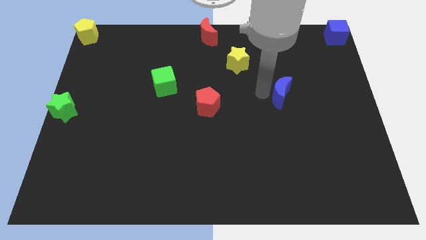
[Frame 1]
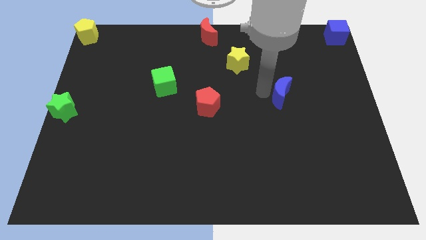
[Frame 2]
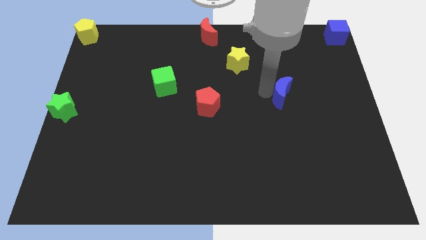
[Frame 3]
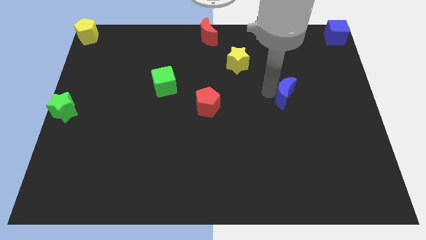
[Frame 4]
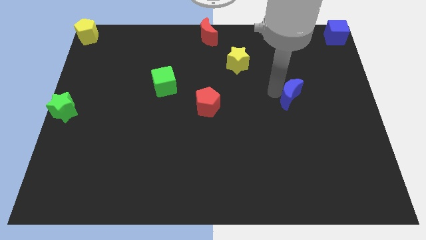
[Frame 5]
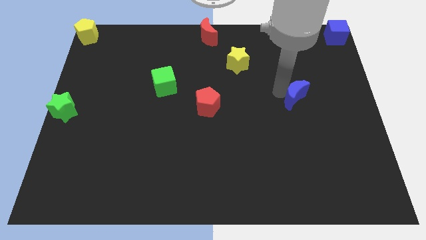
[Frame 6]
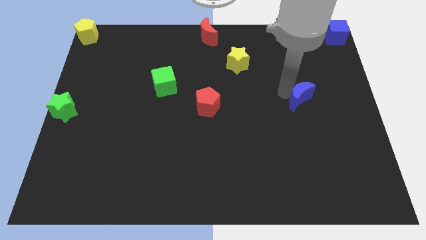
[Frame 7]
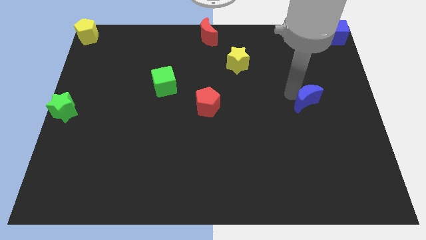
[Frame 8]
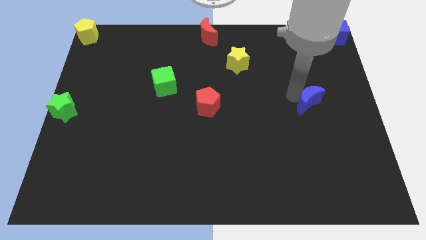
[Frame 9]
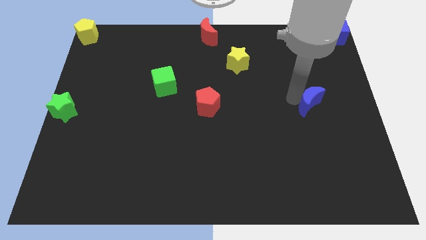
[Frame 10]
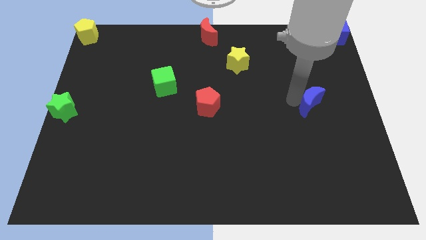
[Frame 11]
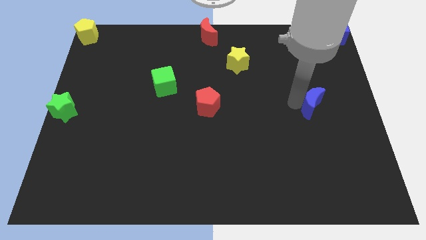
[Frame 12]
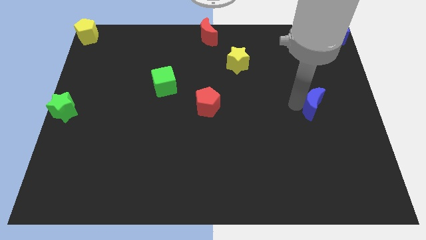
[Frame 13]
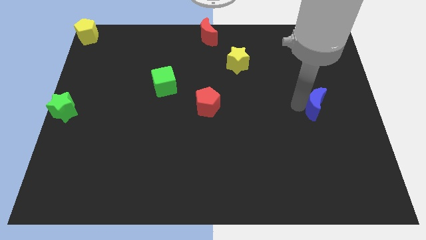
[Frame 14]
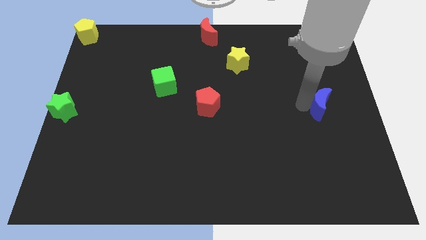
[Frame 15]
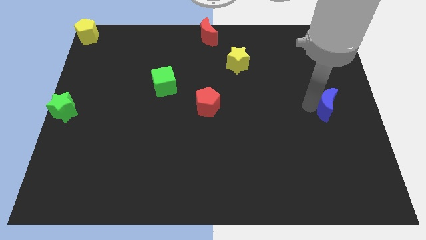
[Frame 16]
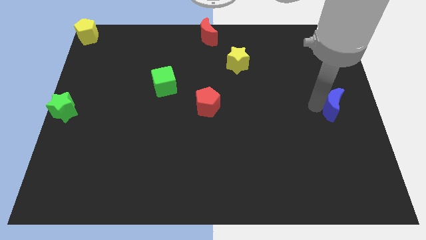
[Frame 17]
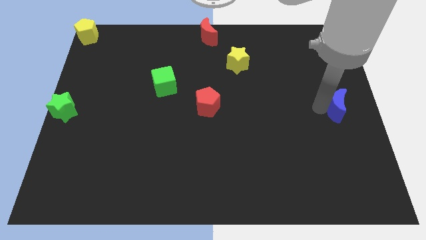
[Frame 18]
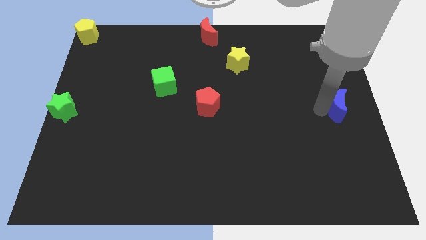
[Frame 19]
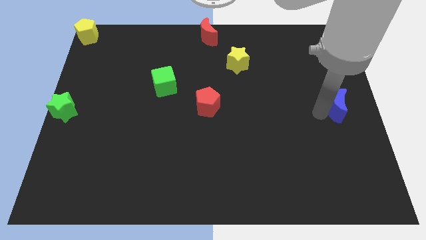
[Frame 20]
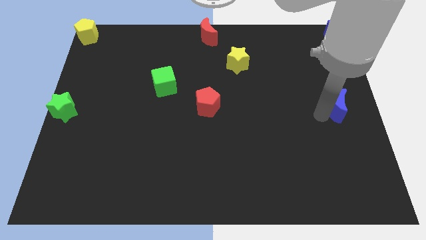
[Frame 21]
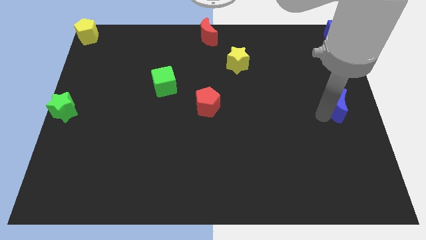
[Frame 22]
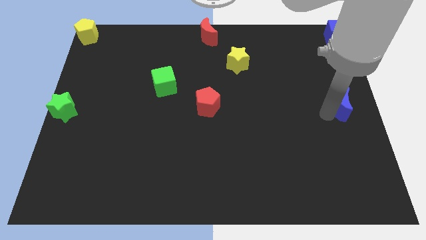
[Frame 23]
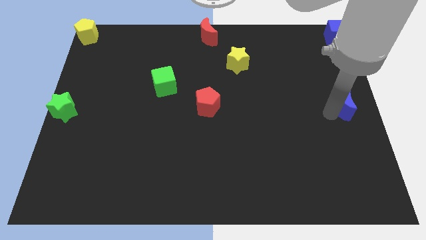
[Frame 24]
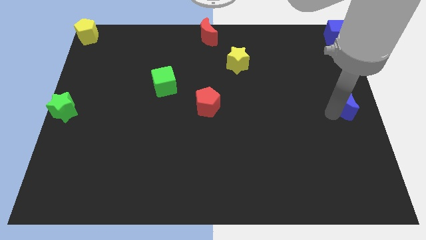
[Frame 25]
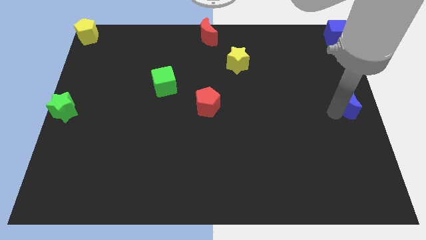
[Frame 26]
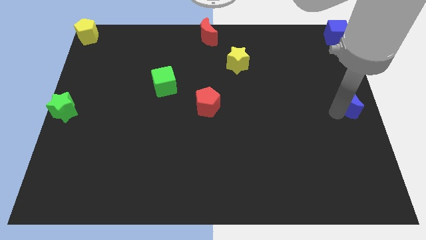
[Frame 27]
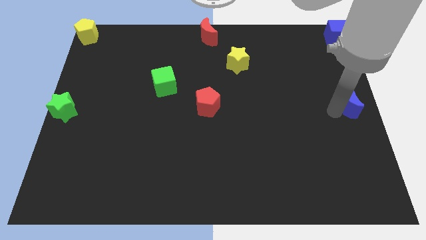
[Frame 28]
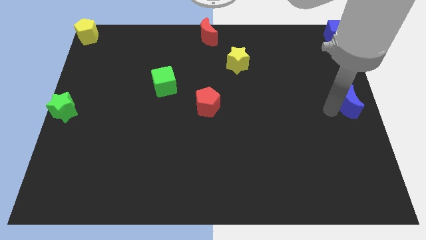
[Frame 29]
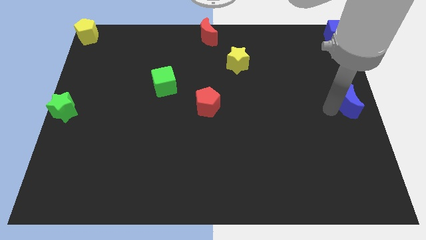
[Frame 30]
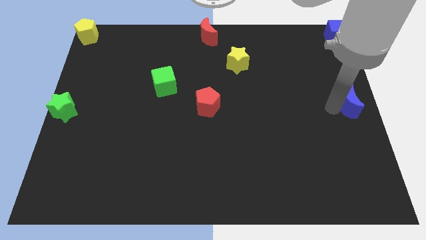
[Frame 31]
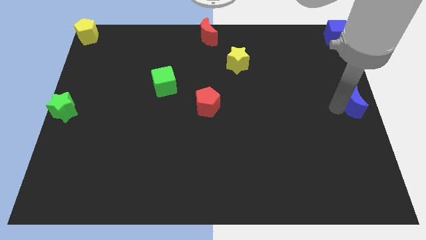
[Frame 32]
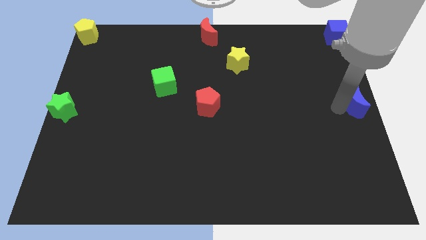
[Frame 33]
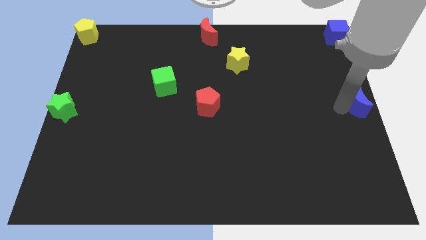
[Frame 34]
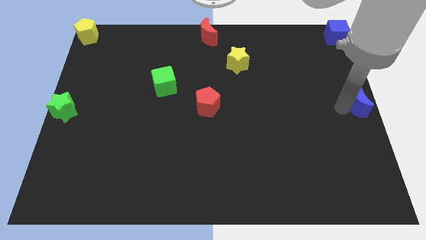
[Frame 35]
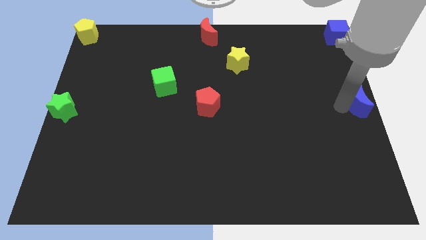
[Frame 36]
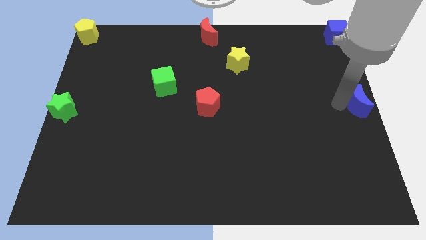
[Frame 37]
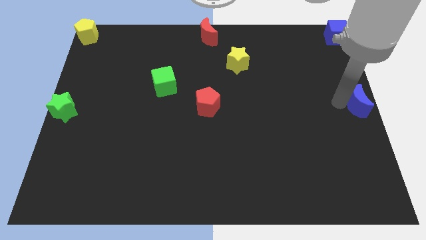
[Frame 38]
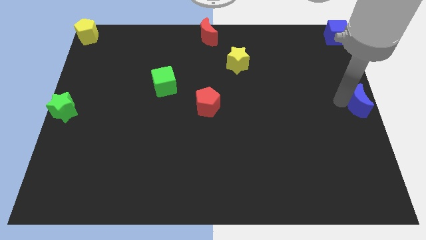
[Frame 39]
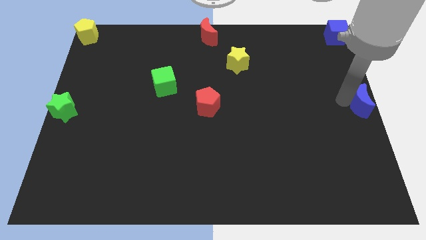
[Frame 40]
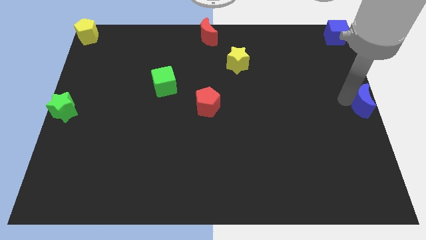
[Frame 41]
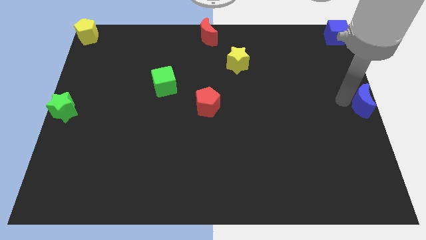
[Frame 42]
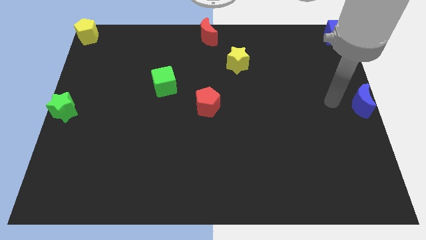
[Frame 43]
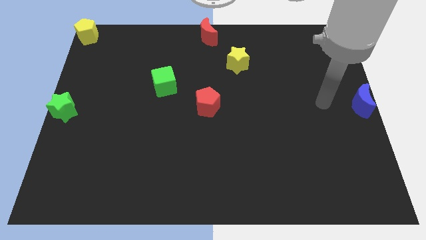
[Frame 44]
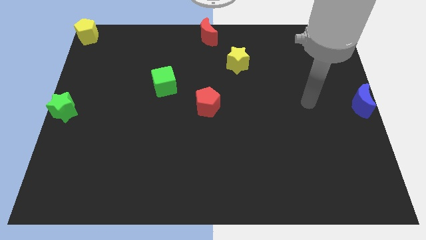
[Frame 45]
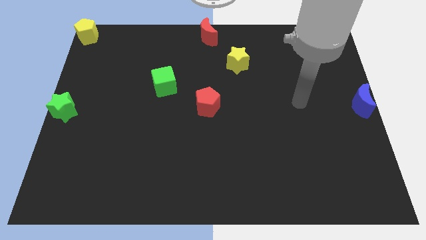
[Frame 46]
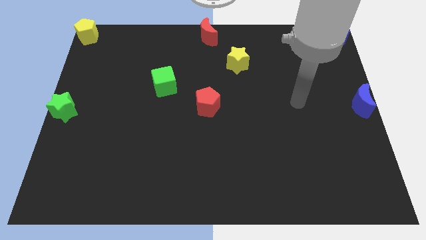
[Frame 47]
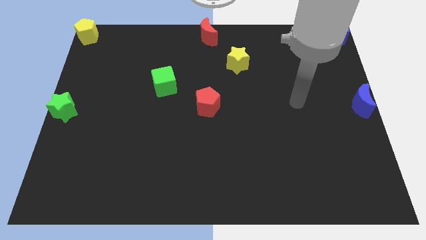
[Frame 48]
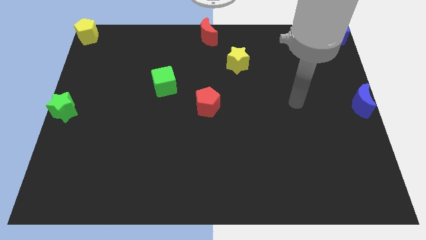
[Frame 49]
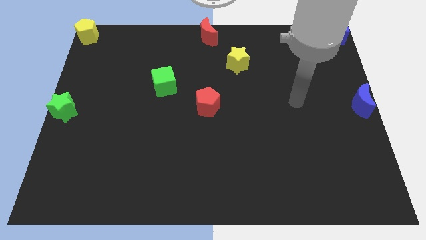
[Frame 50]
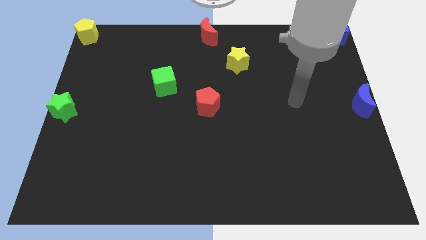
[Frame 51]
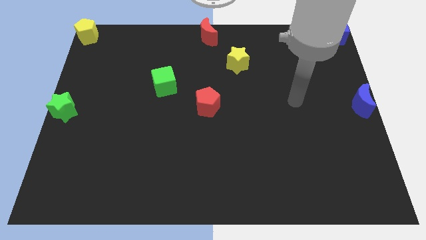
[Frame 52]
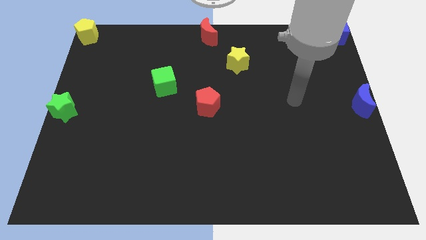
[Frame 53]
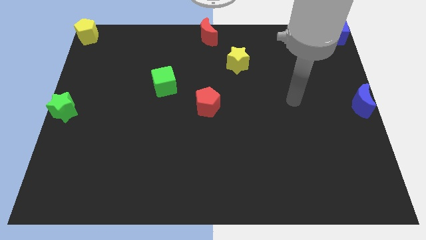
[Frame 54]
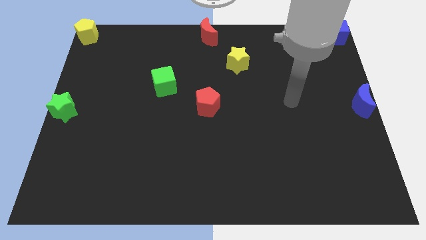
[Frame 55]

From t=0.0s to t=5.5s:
place the blue crescent at right center of the board

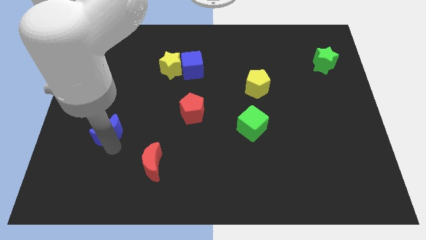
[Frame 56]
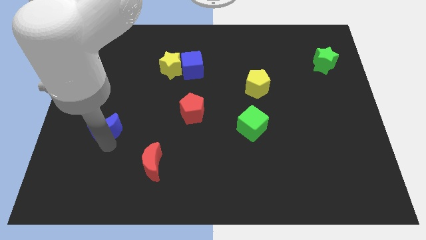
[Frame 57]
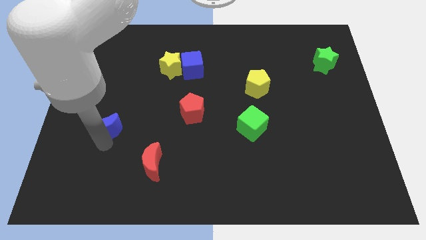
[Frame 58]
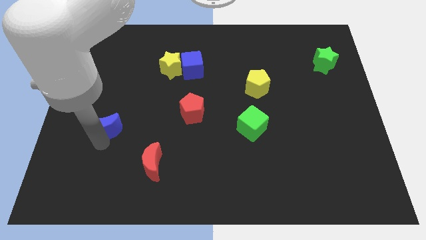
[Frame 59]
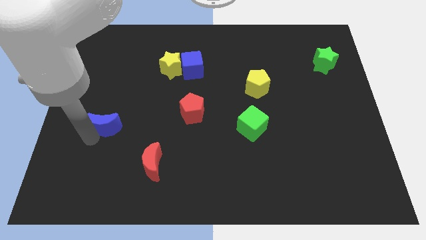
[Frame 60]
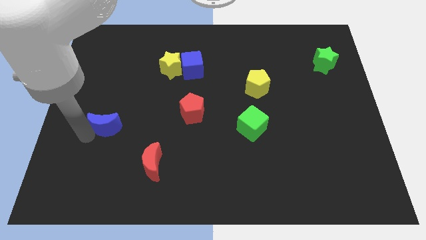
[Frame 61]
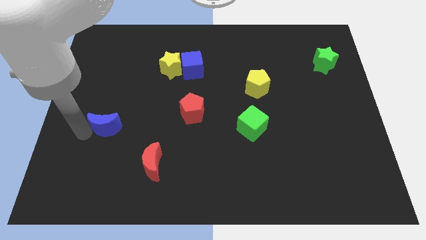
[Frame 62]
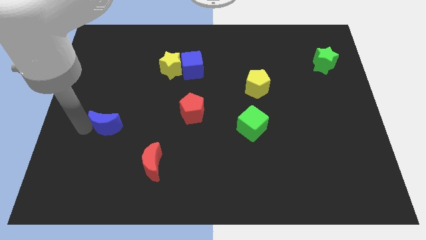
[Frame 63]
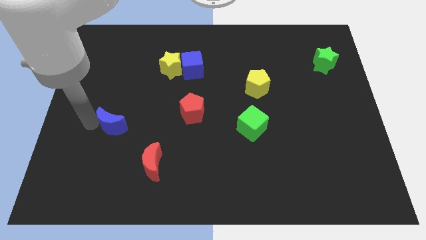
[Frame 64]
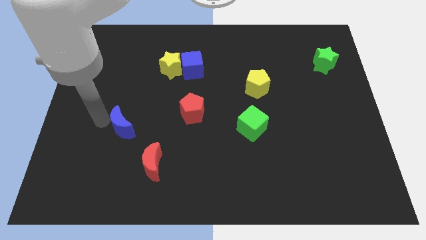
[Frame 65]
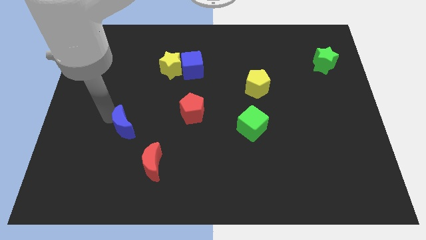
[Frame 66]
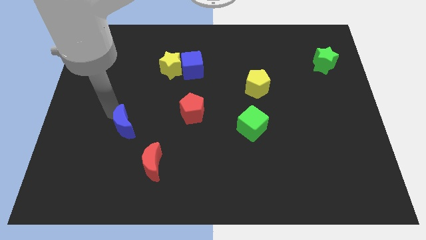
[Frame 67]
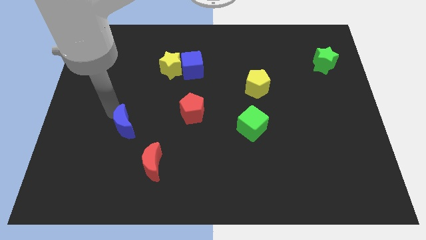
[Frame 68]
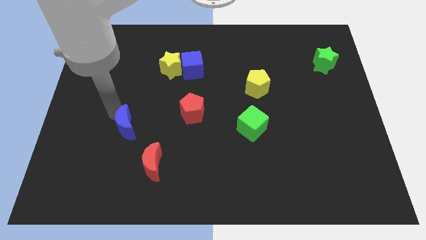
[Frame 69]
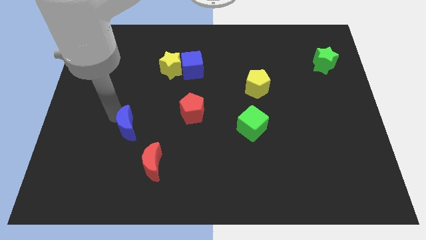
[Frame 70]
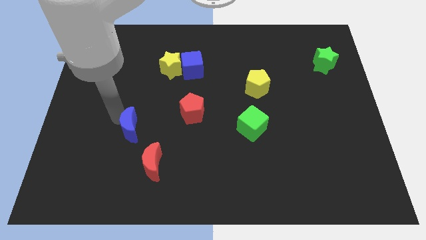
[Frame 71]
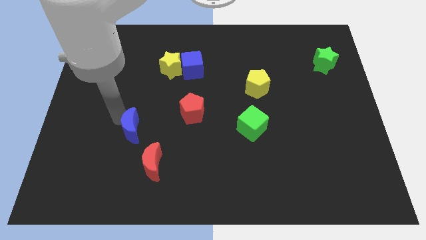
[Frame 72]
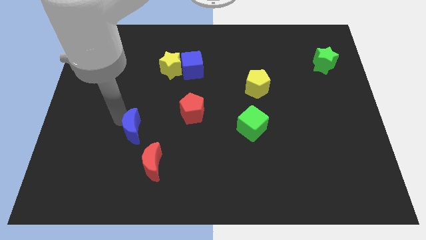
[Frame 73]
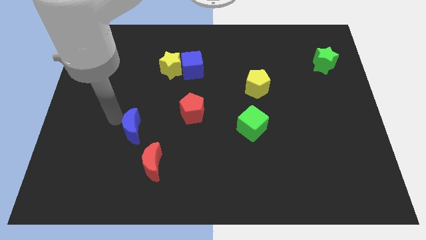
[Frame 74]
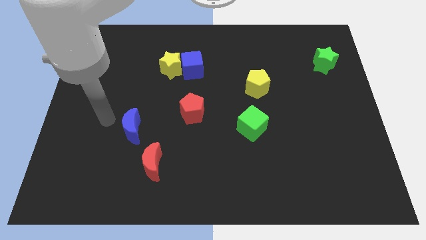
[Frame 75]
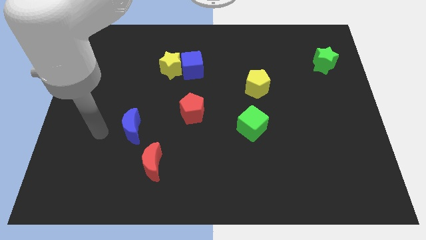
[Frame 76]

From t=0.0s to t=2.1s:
slide the blue moon diagonal above red moon

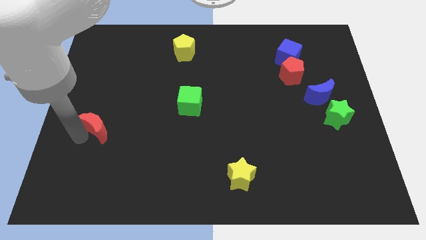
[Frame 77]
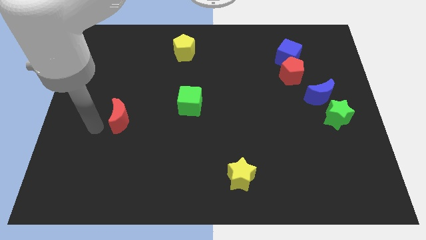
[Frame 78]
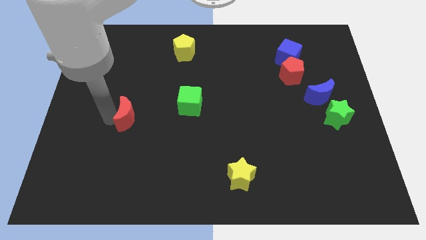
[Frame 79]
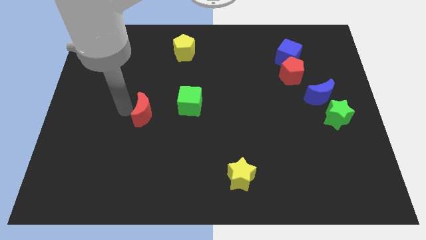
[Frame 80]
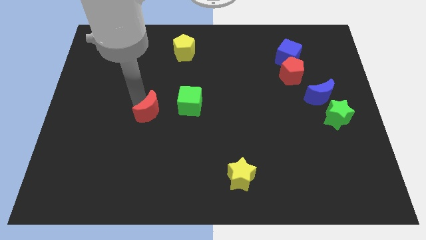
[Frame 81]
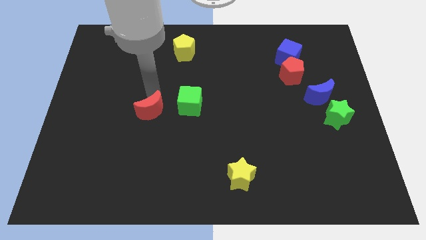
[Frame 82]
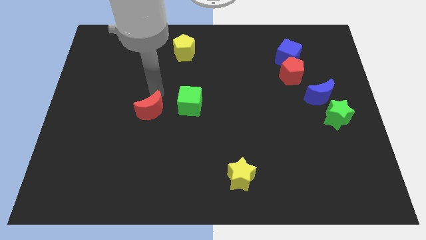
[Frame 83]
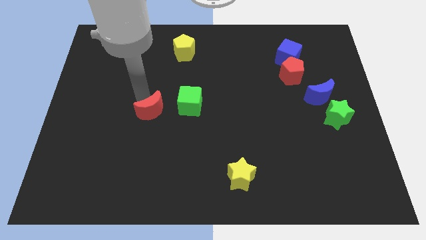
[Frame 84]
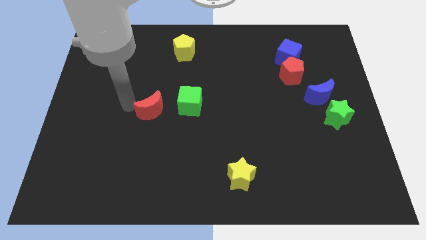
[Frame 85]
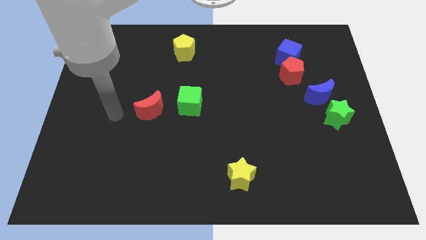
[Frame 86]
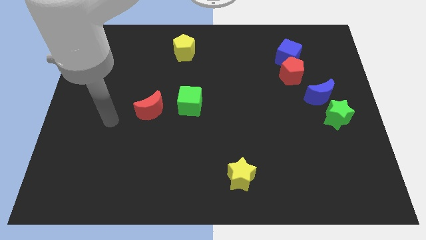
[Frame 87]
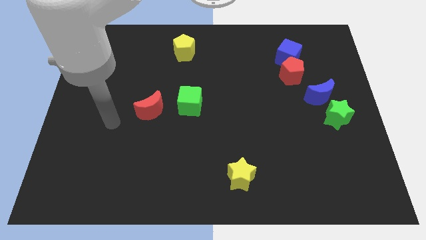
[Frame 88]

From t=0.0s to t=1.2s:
place the red moon left to the green cube

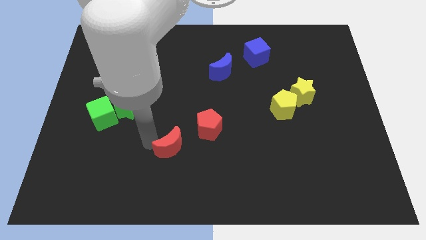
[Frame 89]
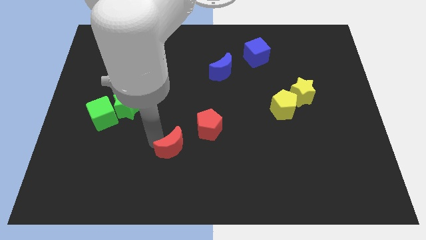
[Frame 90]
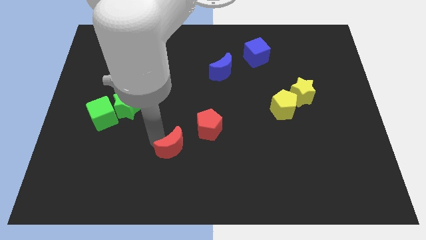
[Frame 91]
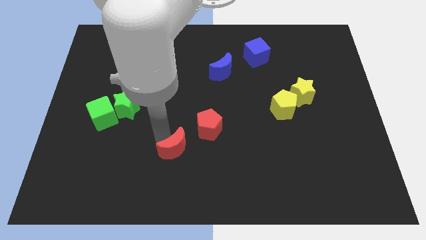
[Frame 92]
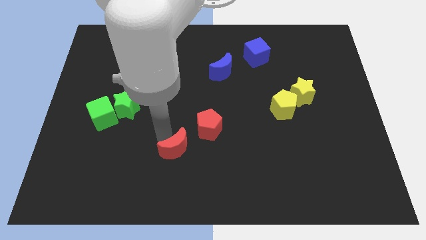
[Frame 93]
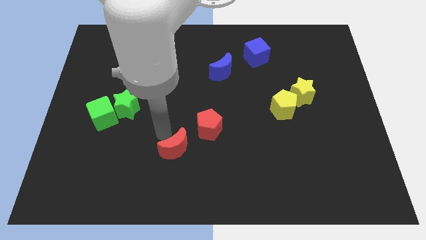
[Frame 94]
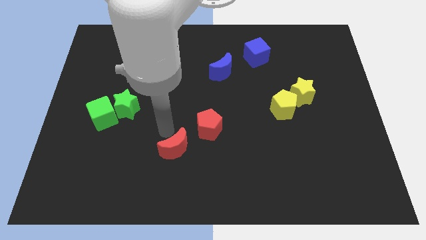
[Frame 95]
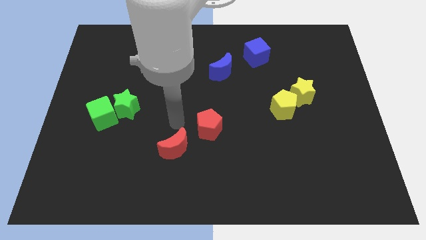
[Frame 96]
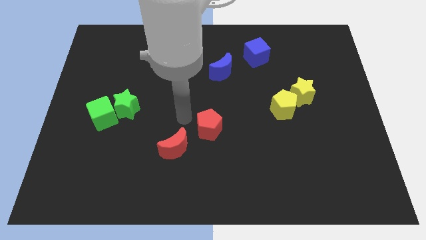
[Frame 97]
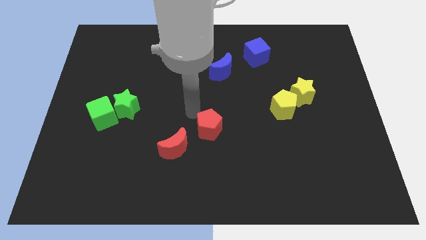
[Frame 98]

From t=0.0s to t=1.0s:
place the red moon diagonally bottom left to the red pentagon
